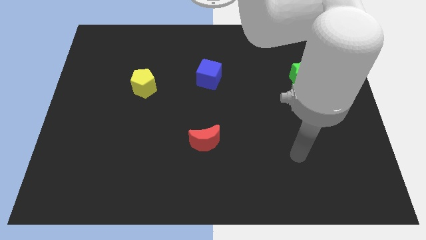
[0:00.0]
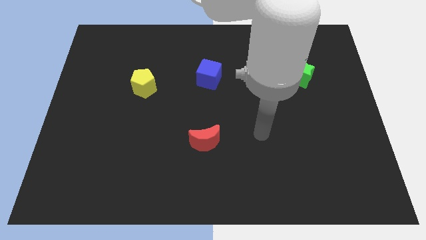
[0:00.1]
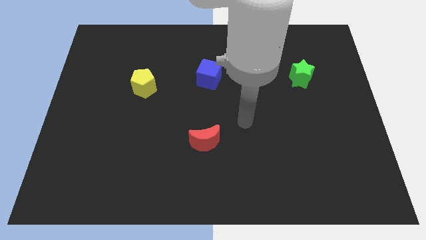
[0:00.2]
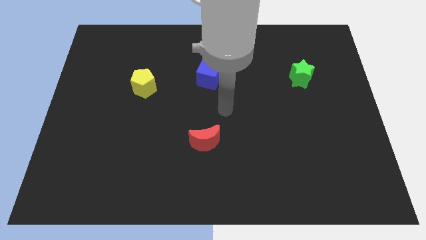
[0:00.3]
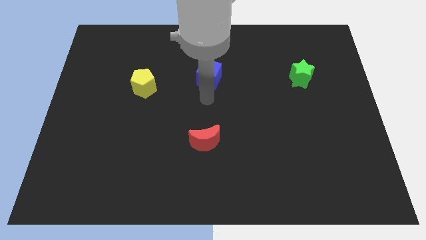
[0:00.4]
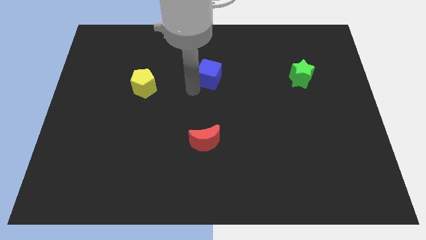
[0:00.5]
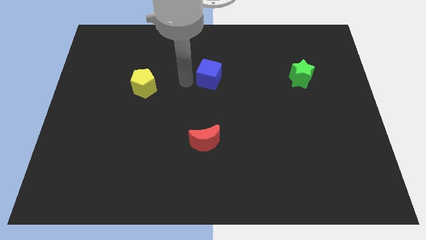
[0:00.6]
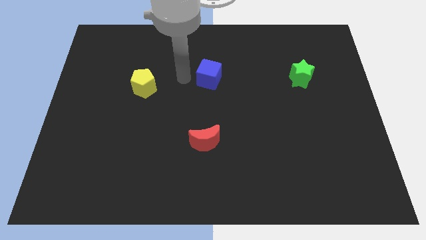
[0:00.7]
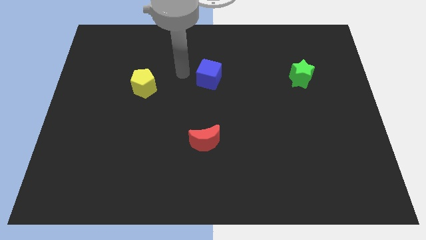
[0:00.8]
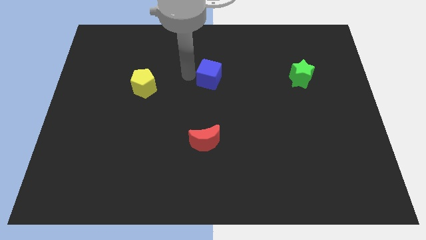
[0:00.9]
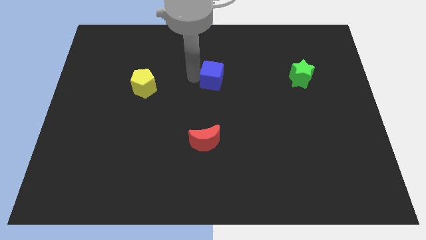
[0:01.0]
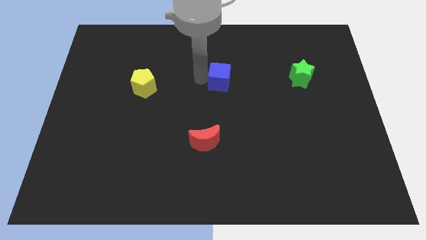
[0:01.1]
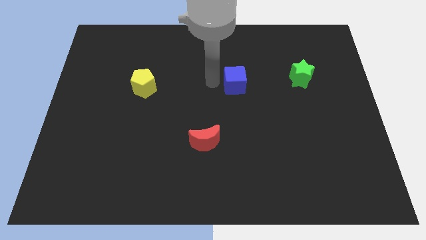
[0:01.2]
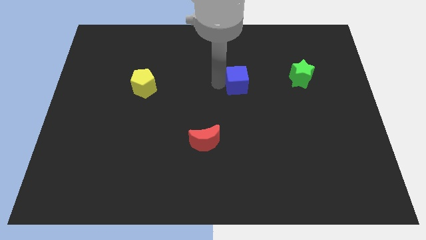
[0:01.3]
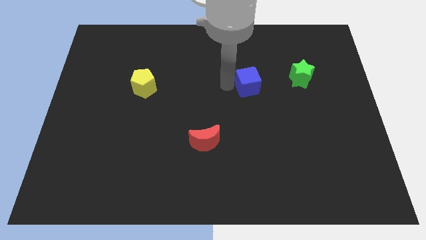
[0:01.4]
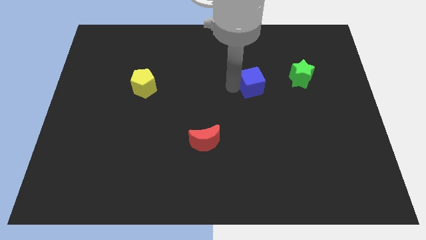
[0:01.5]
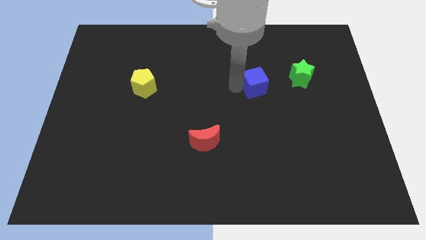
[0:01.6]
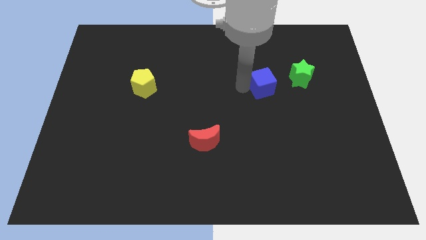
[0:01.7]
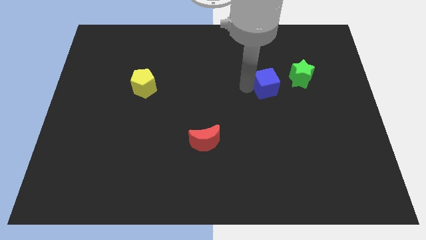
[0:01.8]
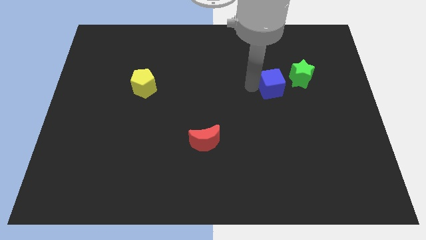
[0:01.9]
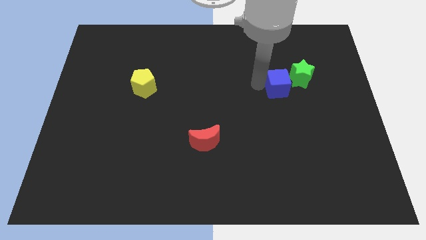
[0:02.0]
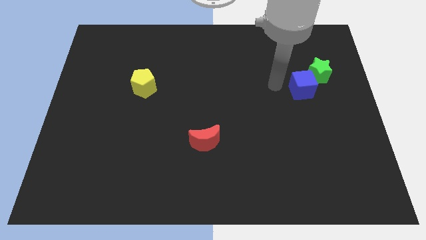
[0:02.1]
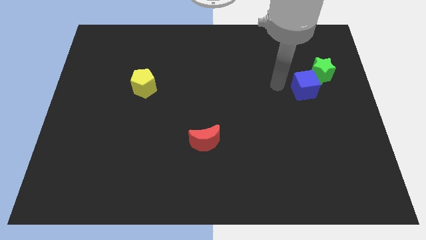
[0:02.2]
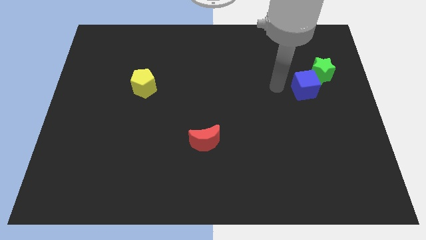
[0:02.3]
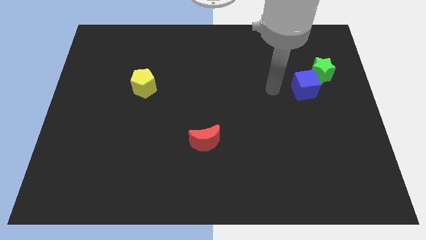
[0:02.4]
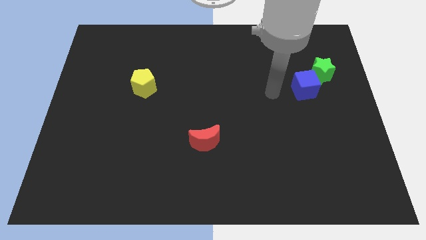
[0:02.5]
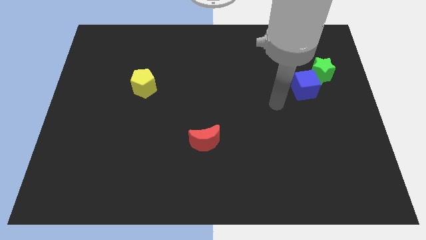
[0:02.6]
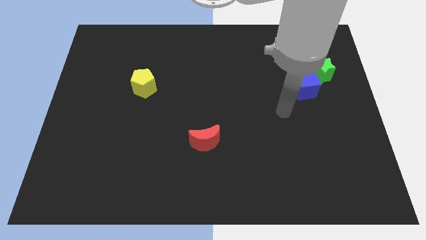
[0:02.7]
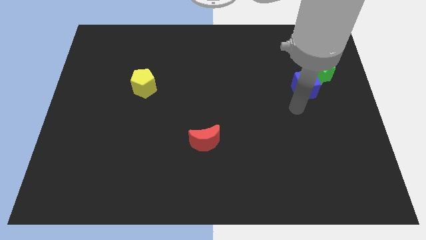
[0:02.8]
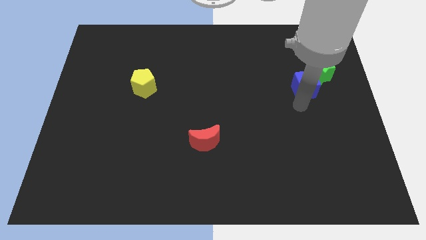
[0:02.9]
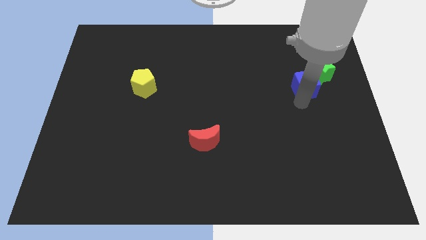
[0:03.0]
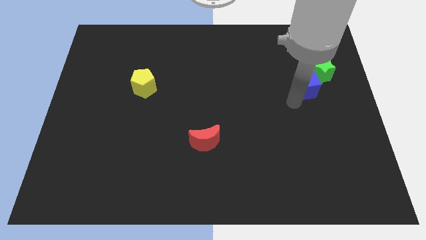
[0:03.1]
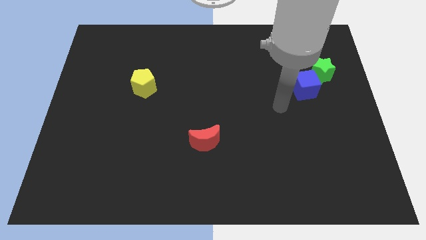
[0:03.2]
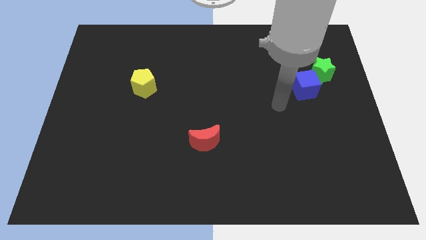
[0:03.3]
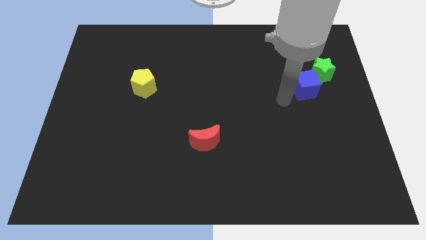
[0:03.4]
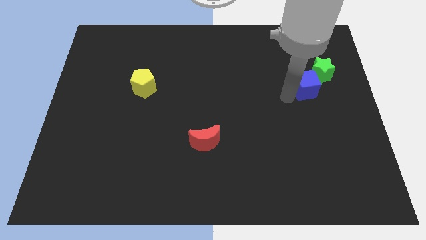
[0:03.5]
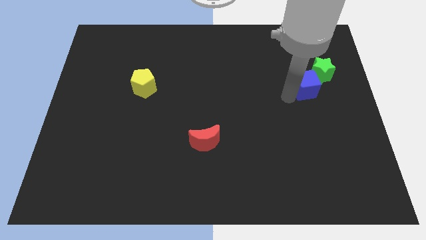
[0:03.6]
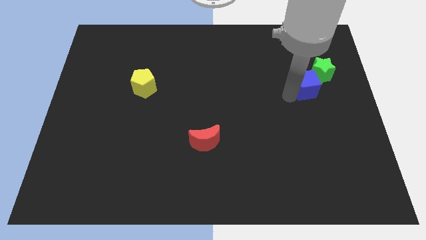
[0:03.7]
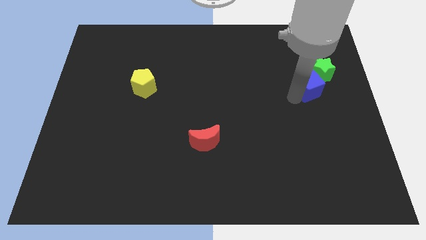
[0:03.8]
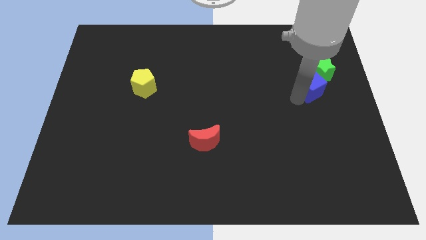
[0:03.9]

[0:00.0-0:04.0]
move the blue block towards the star

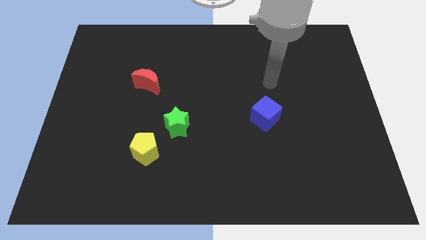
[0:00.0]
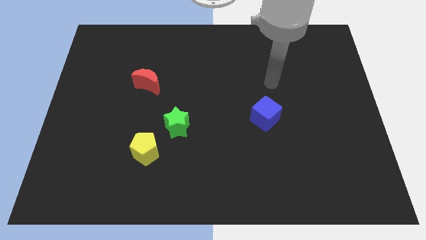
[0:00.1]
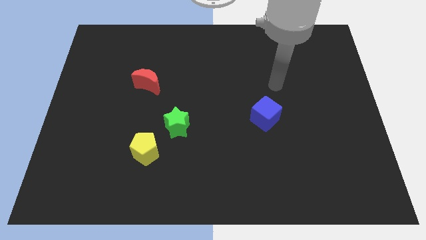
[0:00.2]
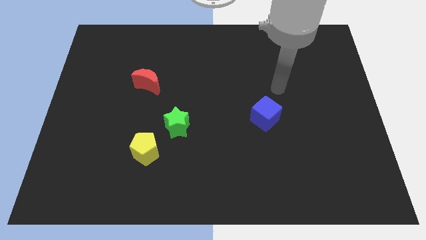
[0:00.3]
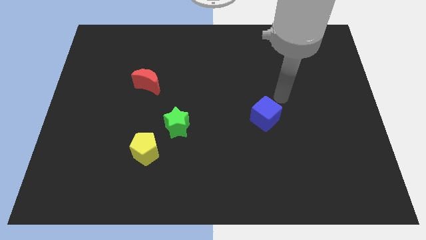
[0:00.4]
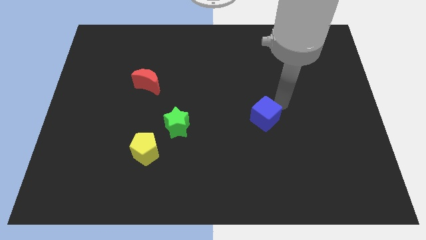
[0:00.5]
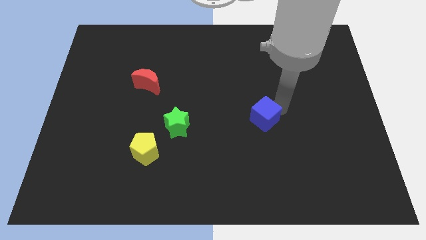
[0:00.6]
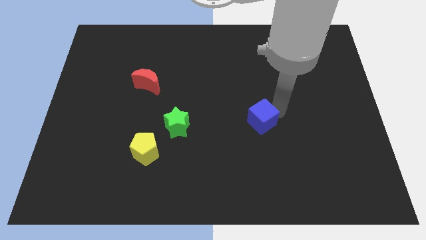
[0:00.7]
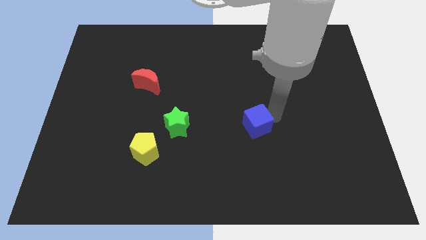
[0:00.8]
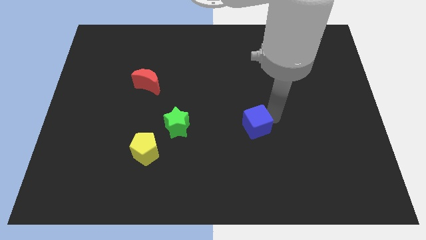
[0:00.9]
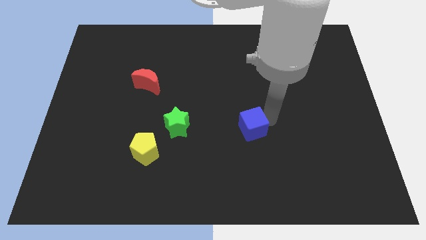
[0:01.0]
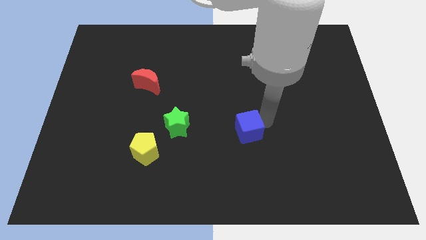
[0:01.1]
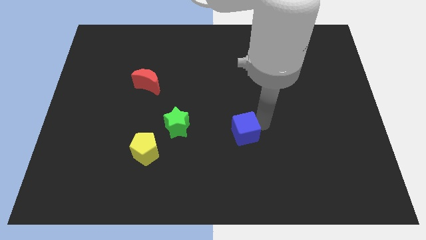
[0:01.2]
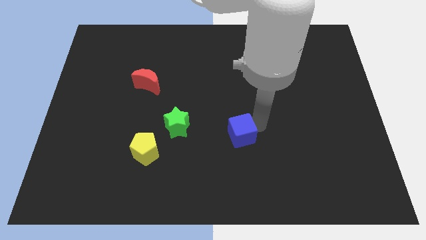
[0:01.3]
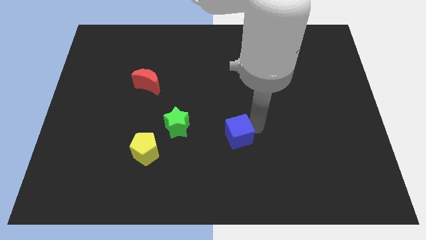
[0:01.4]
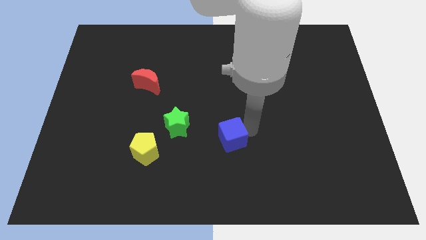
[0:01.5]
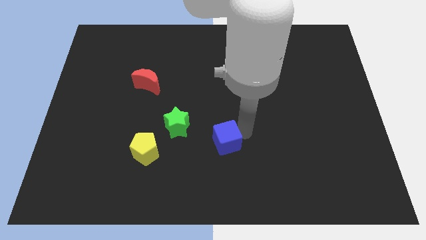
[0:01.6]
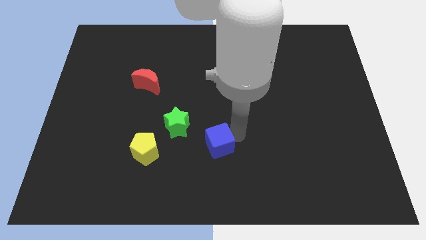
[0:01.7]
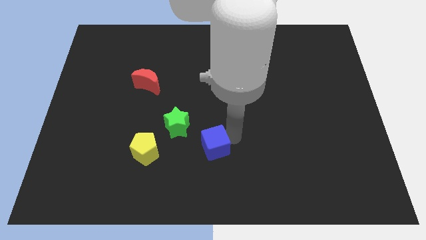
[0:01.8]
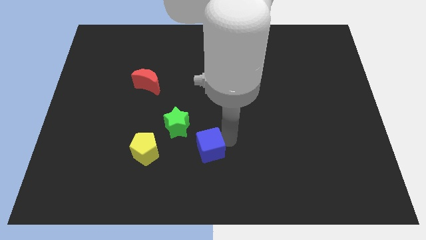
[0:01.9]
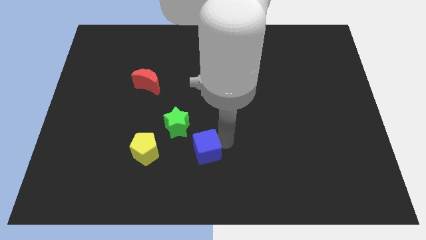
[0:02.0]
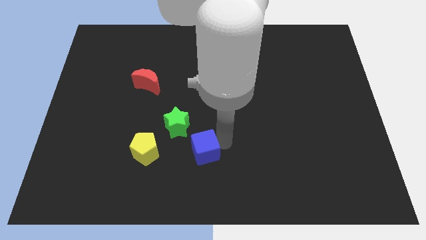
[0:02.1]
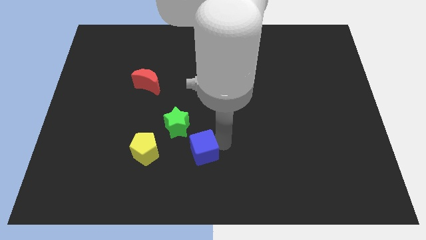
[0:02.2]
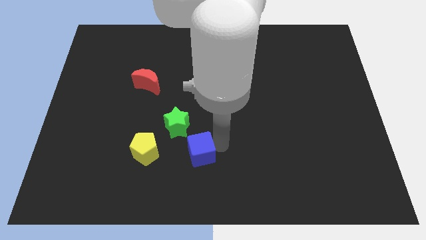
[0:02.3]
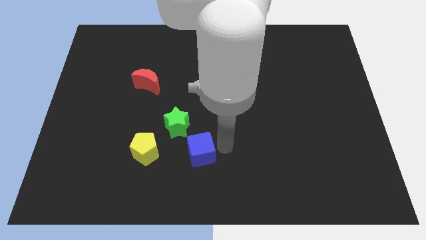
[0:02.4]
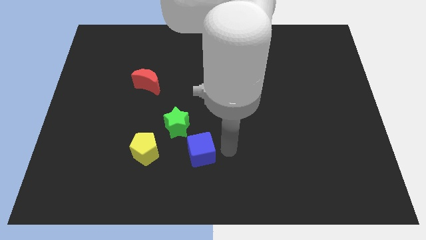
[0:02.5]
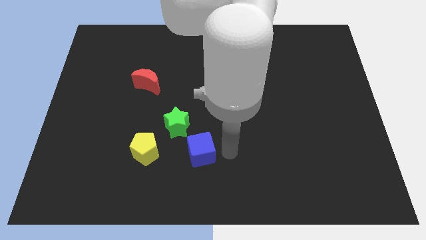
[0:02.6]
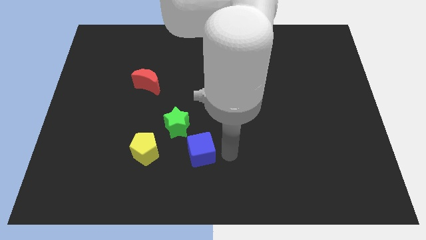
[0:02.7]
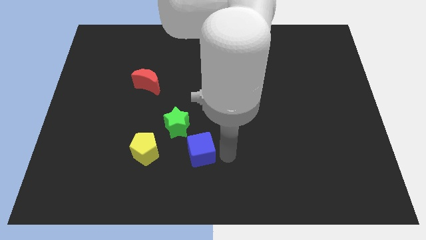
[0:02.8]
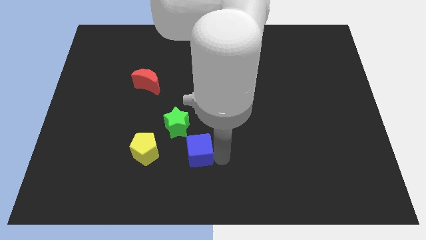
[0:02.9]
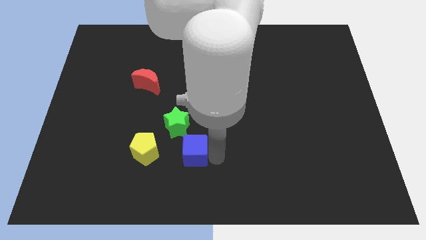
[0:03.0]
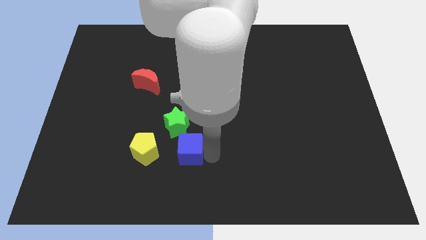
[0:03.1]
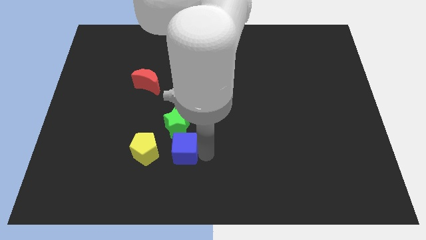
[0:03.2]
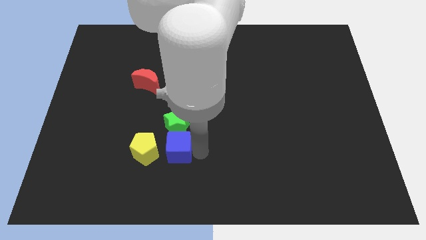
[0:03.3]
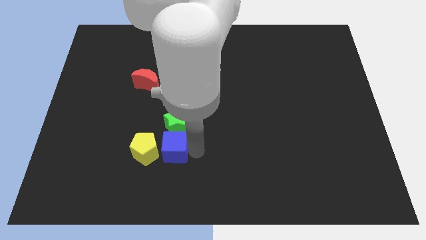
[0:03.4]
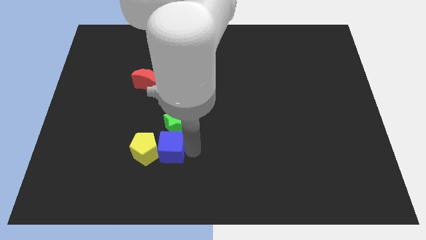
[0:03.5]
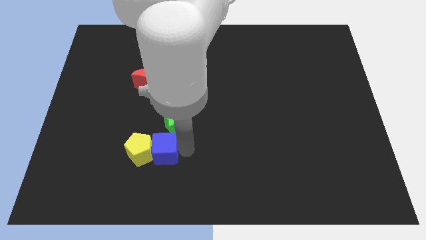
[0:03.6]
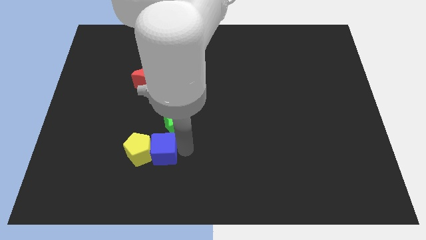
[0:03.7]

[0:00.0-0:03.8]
move the cube close to the yellow pentagon

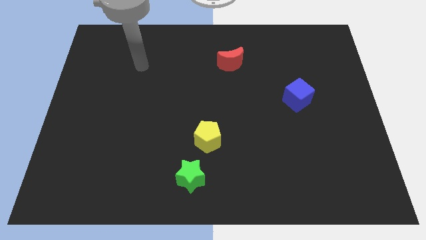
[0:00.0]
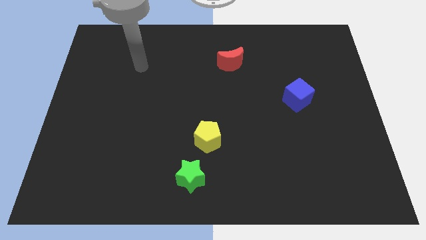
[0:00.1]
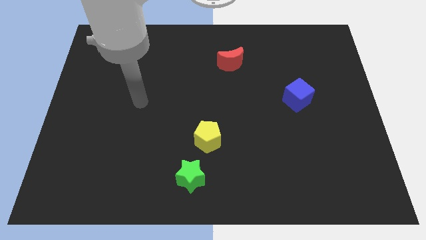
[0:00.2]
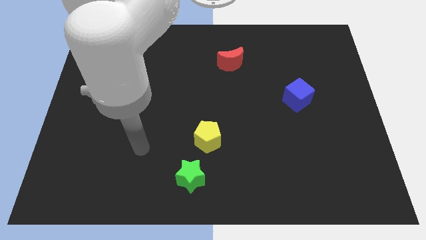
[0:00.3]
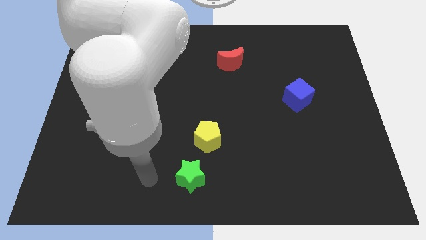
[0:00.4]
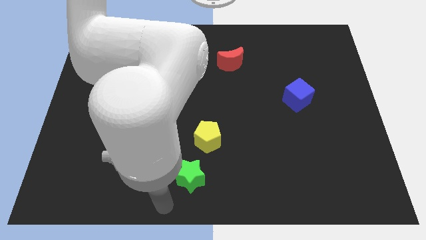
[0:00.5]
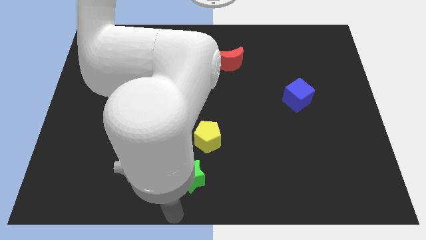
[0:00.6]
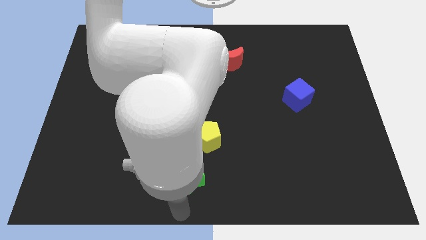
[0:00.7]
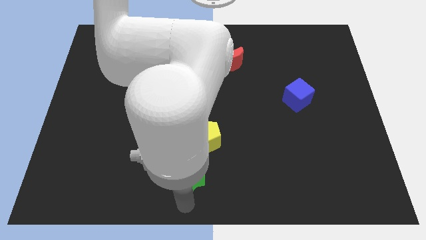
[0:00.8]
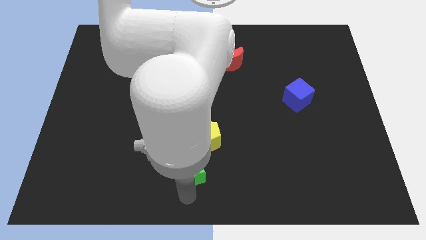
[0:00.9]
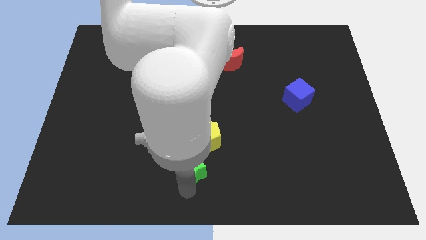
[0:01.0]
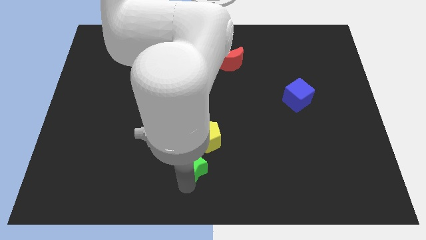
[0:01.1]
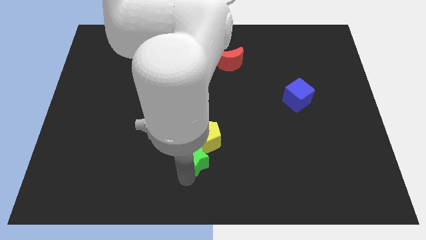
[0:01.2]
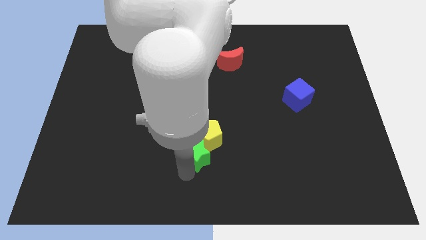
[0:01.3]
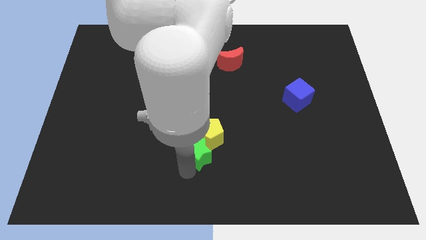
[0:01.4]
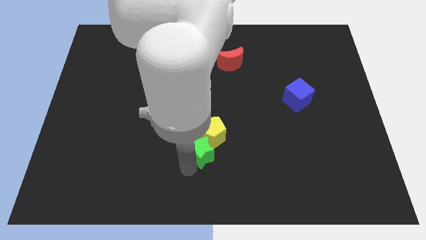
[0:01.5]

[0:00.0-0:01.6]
push the green star next to the yellow block
